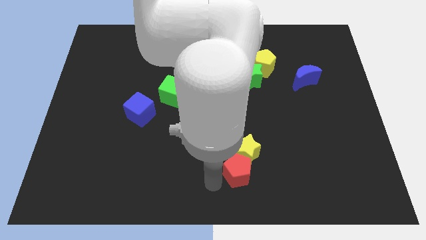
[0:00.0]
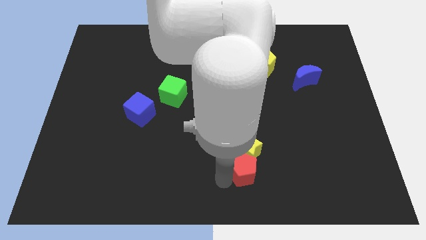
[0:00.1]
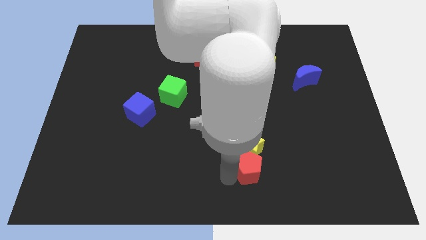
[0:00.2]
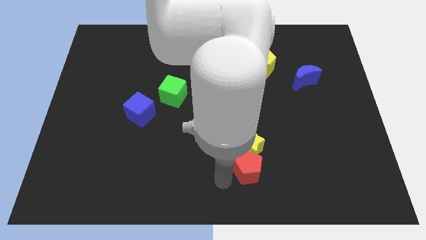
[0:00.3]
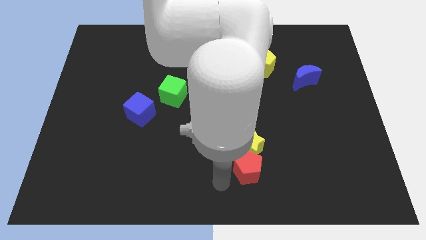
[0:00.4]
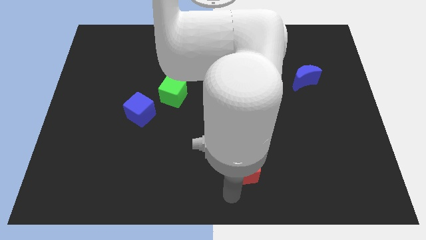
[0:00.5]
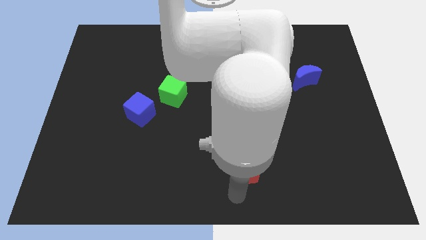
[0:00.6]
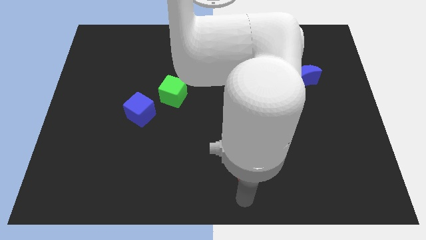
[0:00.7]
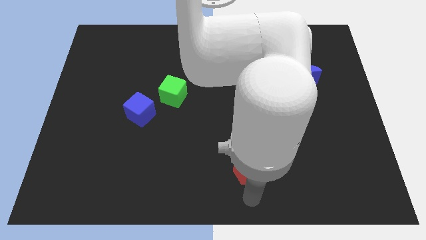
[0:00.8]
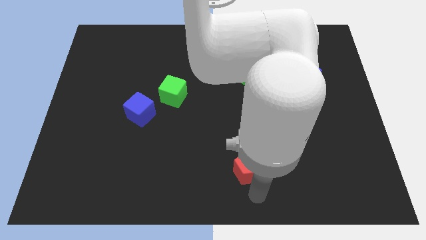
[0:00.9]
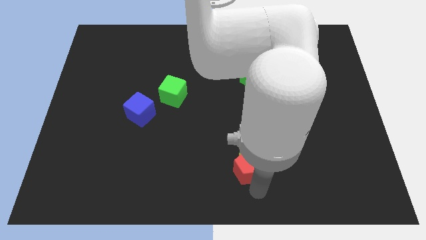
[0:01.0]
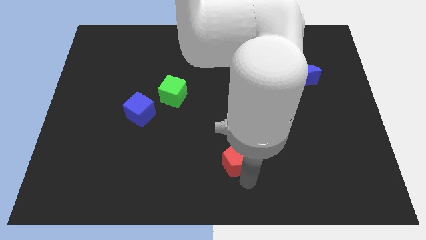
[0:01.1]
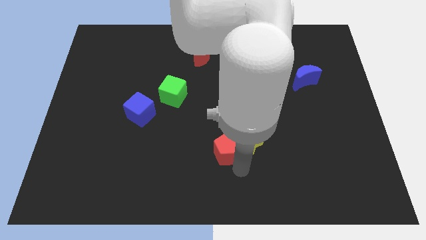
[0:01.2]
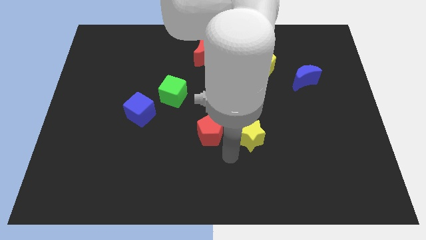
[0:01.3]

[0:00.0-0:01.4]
separate the red pentagon from the yellow star

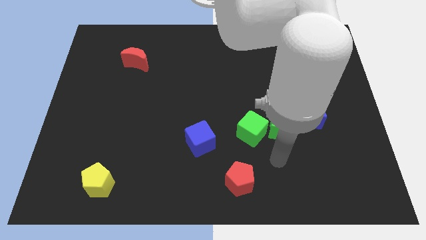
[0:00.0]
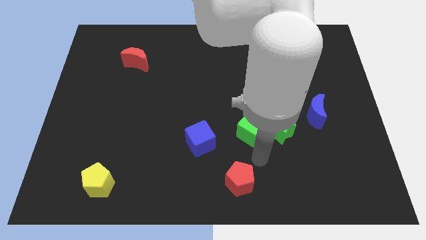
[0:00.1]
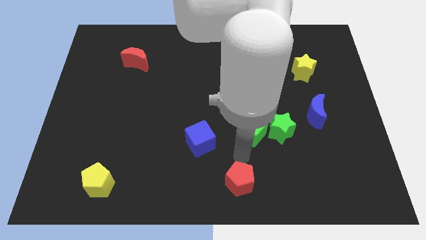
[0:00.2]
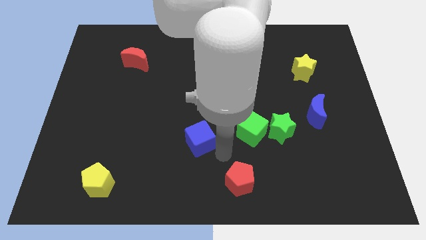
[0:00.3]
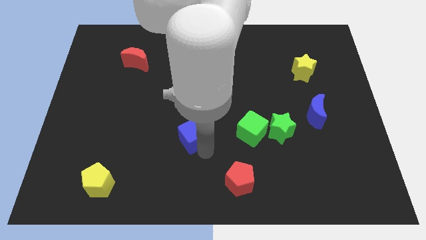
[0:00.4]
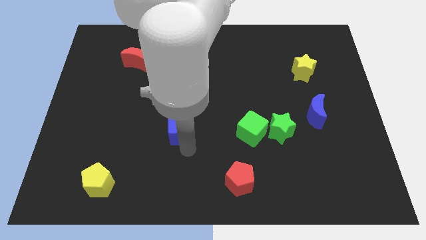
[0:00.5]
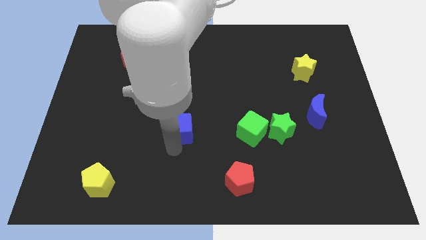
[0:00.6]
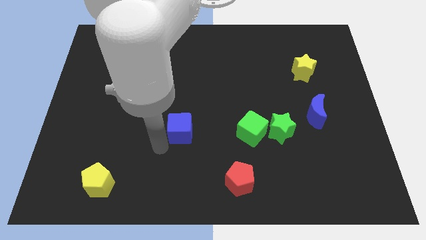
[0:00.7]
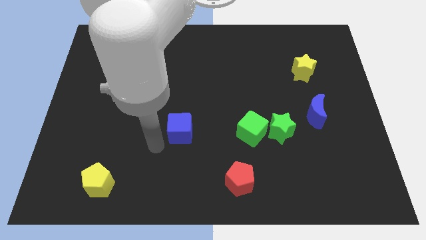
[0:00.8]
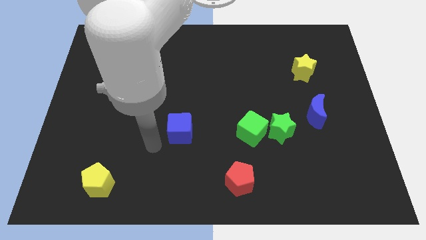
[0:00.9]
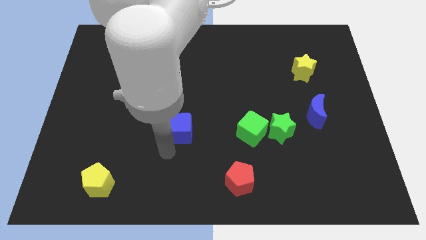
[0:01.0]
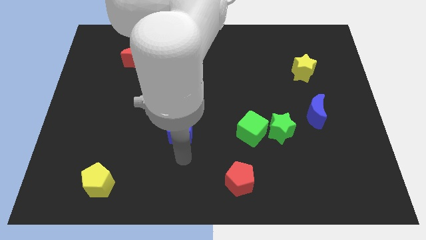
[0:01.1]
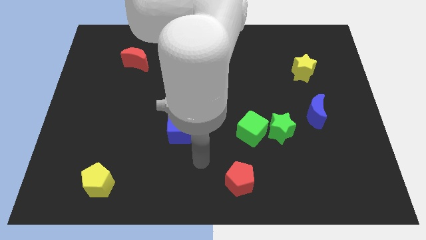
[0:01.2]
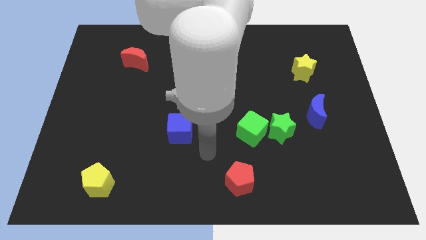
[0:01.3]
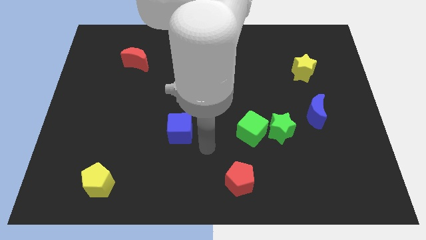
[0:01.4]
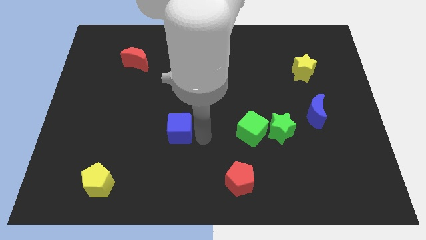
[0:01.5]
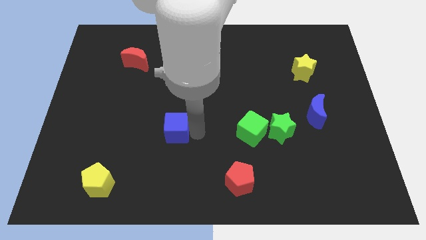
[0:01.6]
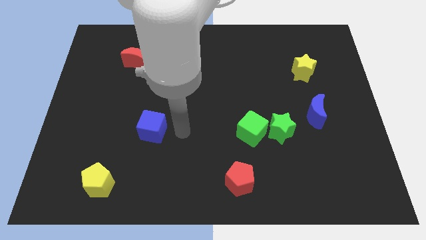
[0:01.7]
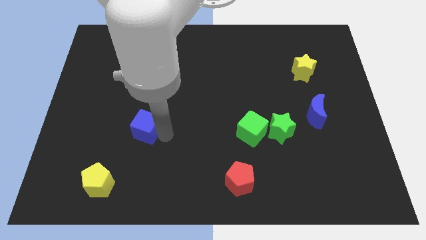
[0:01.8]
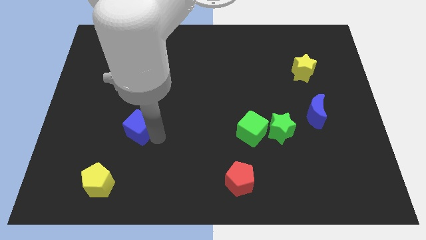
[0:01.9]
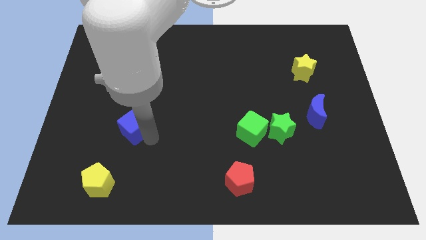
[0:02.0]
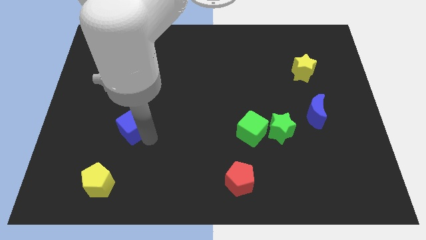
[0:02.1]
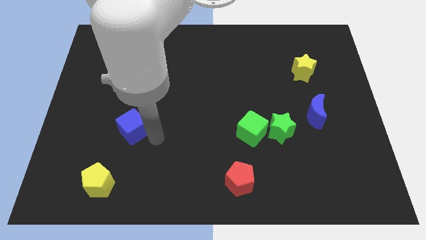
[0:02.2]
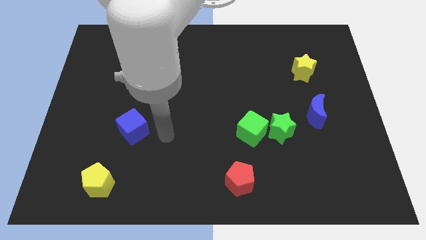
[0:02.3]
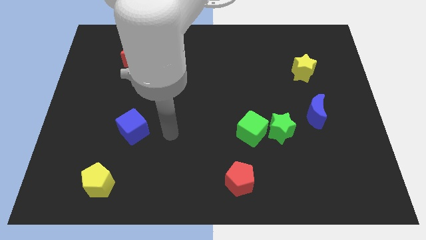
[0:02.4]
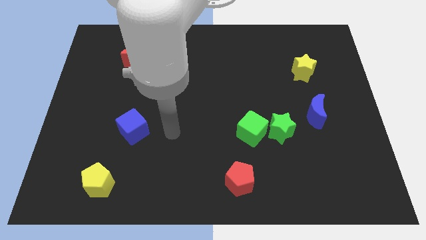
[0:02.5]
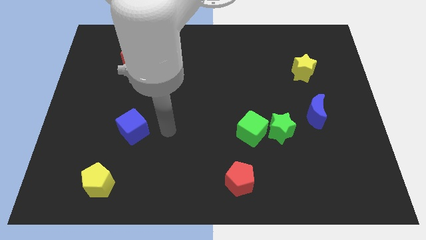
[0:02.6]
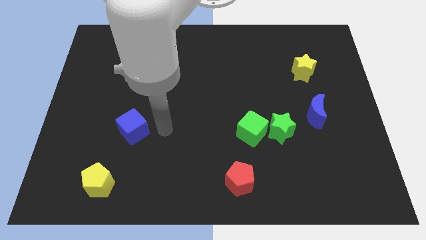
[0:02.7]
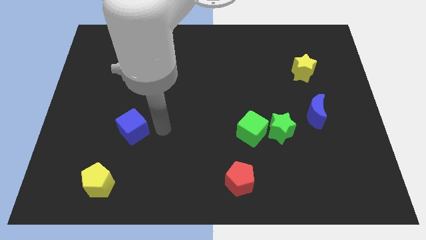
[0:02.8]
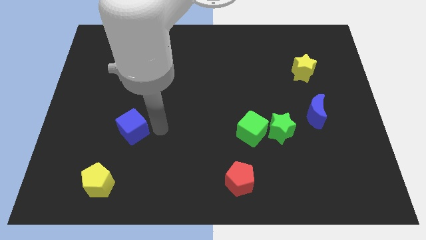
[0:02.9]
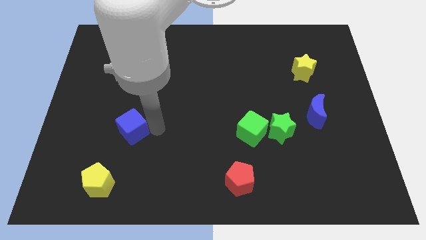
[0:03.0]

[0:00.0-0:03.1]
push blue cube towards left side of board

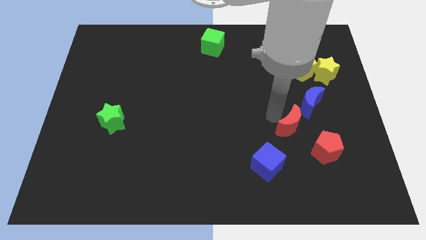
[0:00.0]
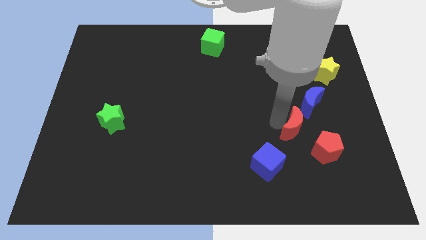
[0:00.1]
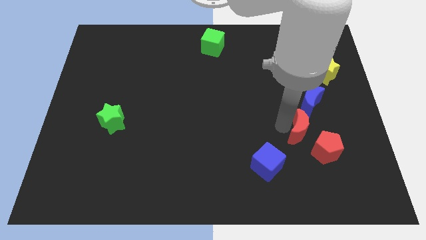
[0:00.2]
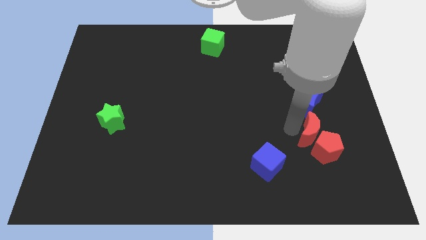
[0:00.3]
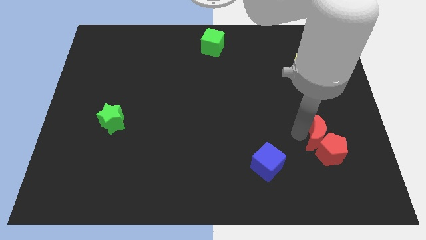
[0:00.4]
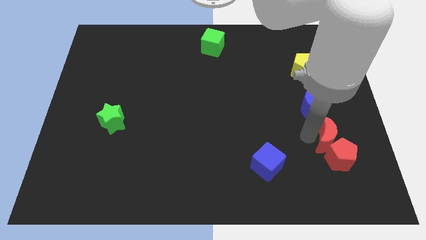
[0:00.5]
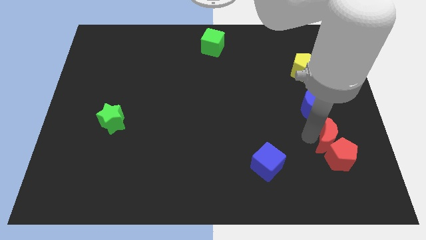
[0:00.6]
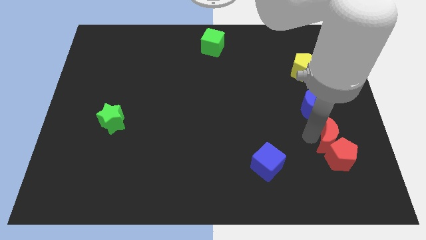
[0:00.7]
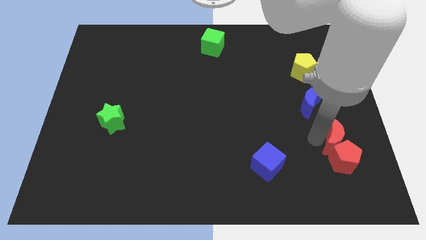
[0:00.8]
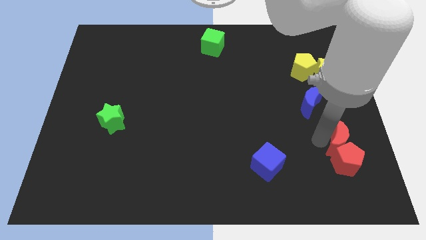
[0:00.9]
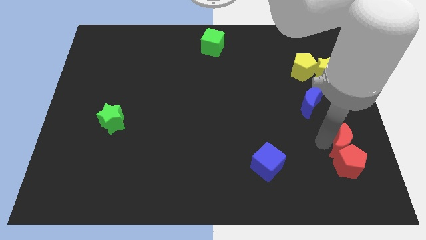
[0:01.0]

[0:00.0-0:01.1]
push the red crescent into the red pentagon towards the bottom right of thr board

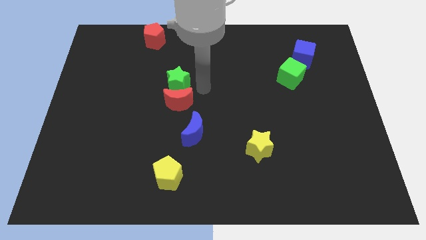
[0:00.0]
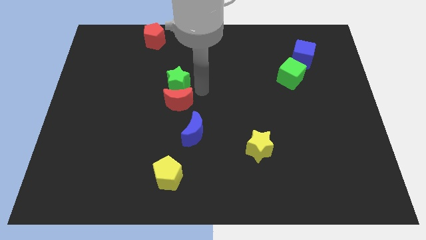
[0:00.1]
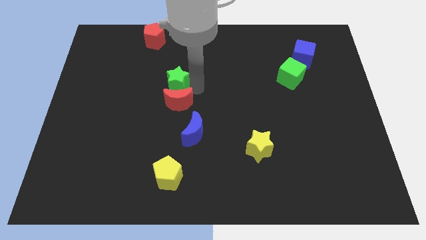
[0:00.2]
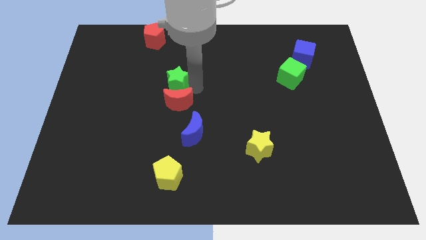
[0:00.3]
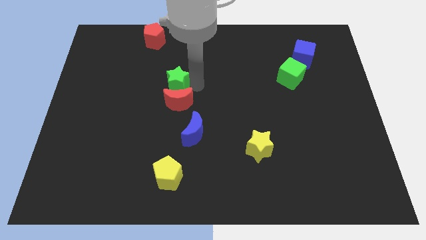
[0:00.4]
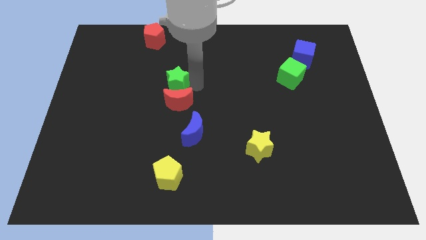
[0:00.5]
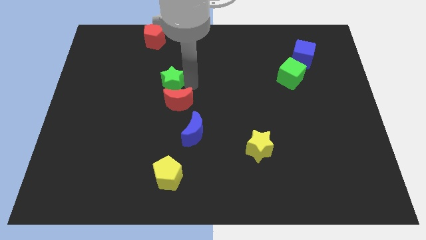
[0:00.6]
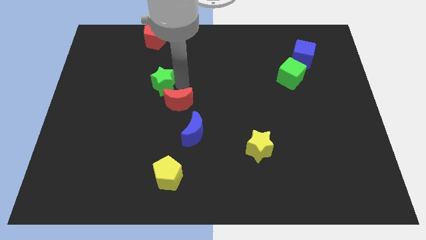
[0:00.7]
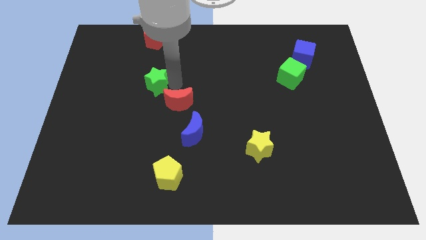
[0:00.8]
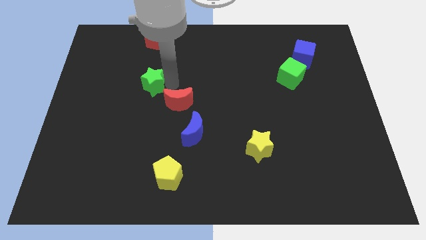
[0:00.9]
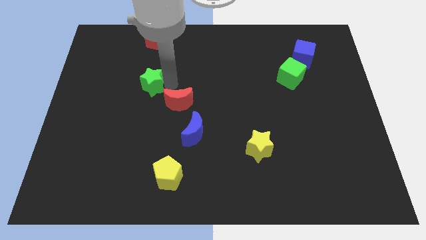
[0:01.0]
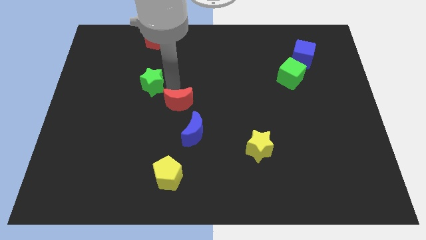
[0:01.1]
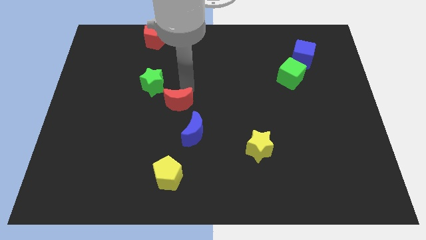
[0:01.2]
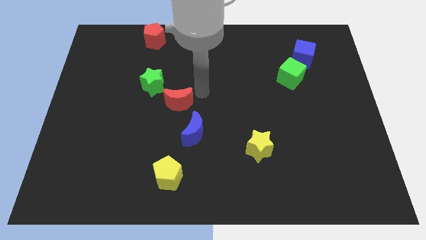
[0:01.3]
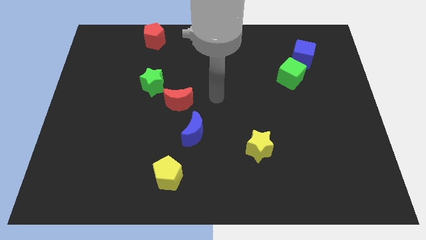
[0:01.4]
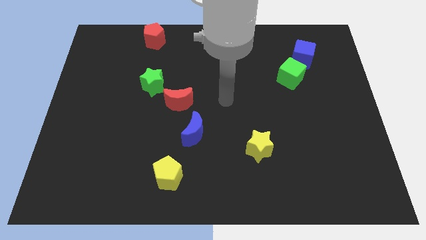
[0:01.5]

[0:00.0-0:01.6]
separate the green star from the red moon

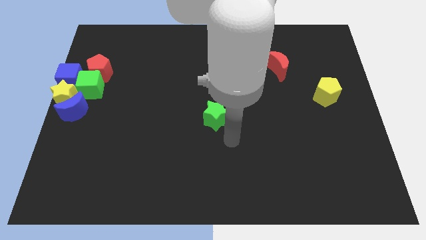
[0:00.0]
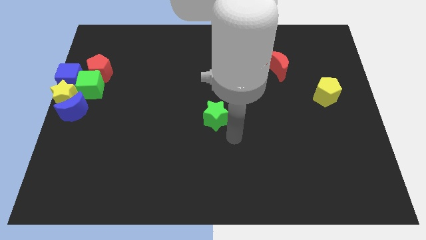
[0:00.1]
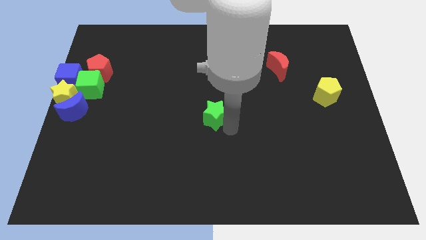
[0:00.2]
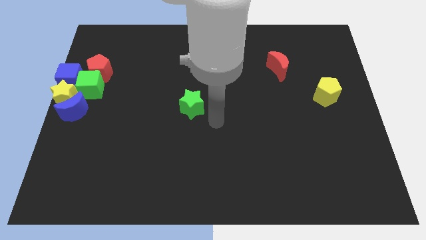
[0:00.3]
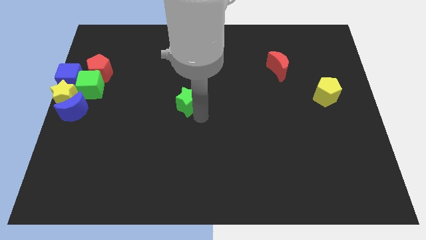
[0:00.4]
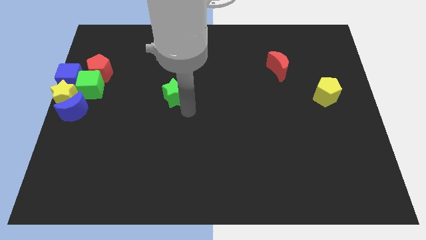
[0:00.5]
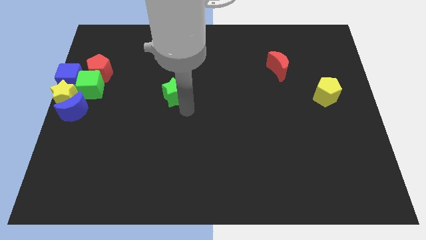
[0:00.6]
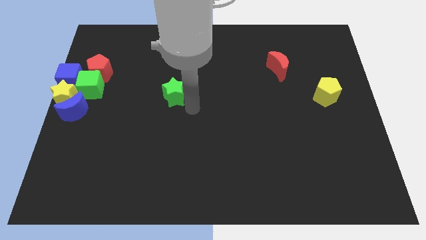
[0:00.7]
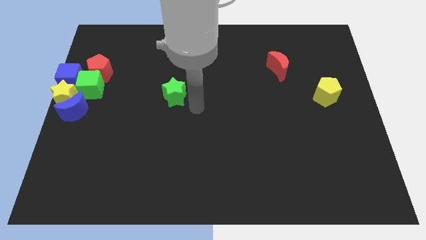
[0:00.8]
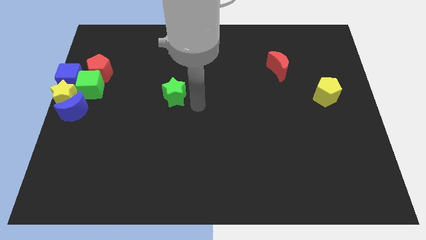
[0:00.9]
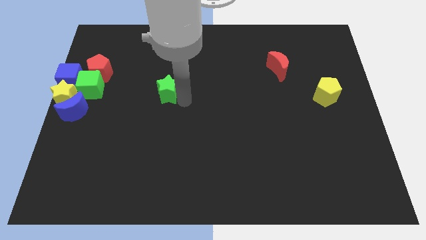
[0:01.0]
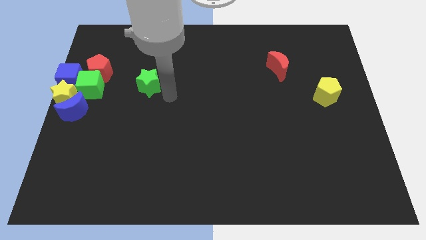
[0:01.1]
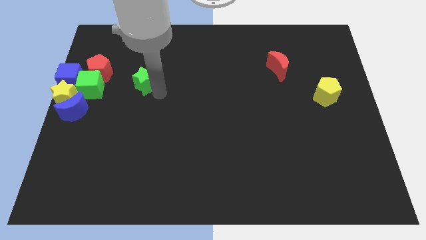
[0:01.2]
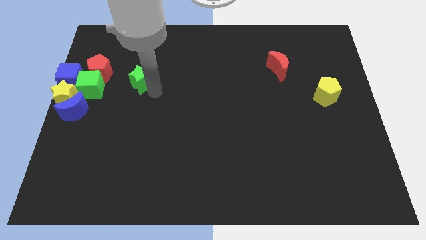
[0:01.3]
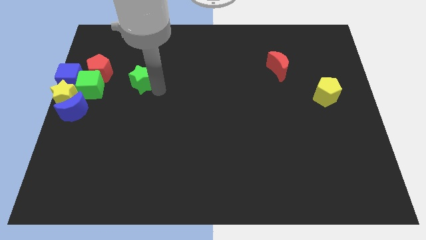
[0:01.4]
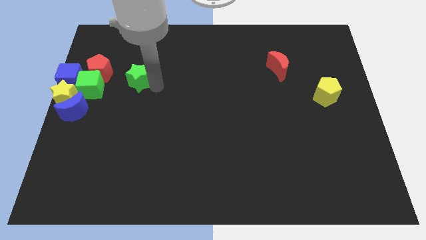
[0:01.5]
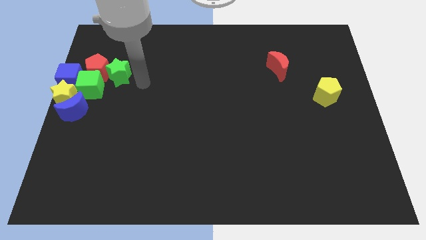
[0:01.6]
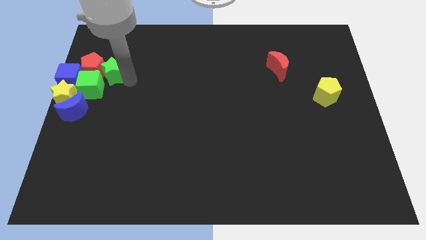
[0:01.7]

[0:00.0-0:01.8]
place the green star at the right side of the red pentagon
